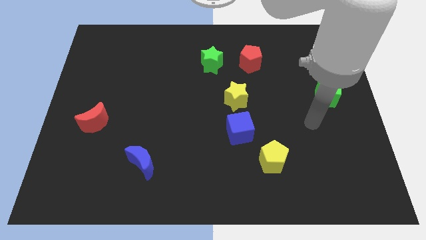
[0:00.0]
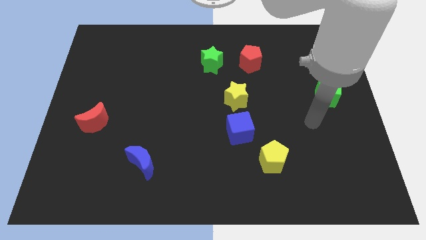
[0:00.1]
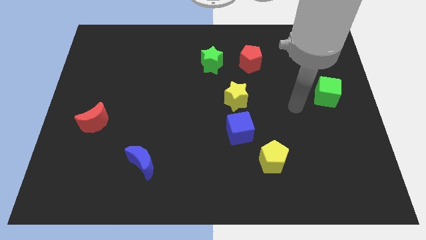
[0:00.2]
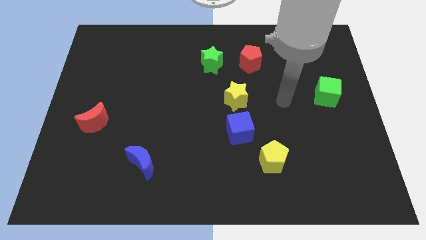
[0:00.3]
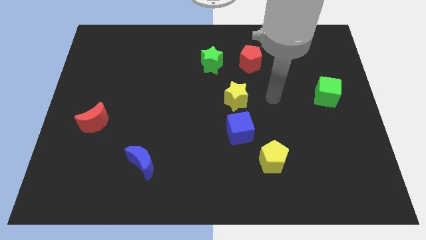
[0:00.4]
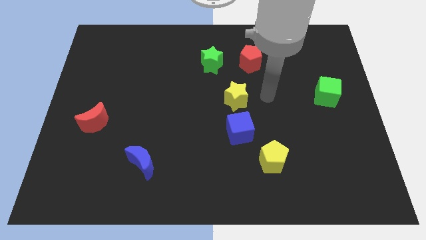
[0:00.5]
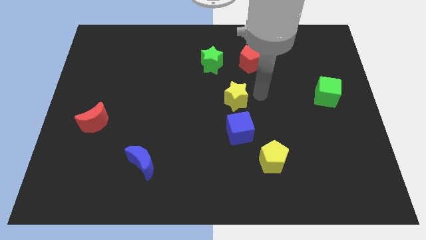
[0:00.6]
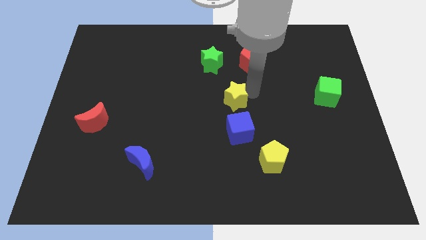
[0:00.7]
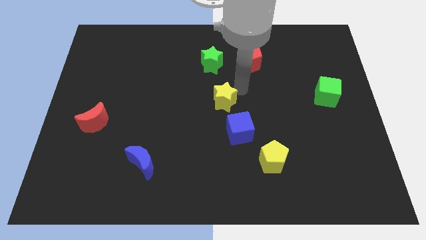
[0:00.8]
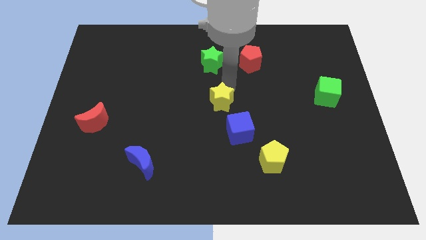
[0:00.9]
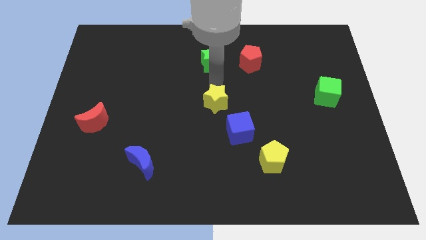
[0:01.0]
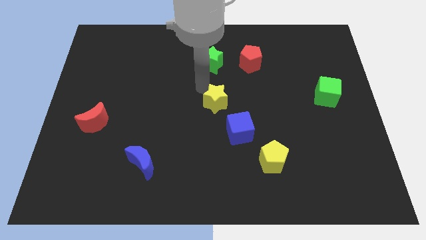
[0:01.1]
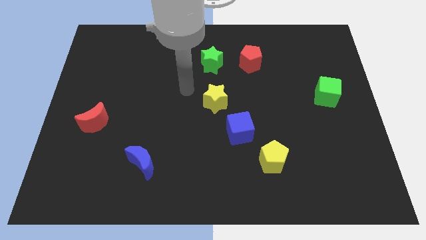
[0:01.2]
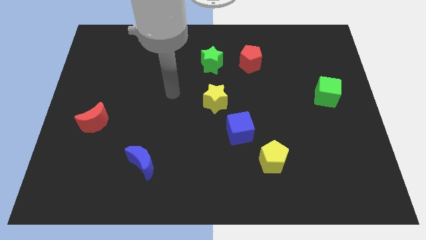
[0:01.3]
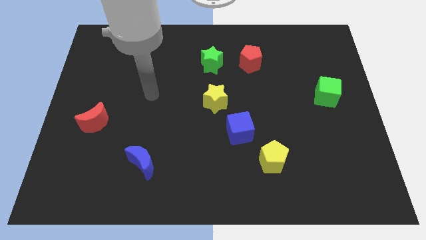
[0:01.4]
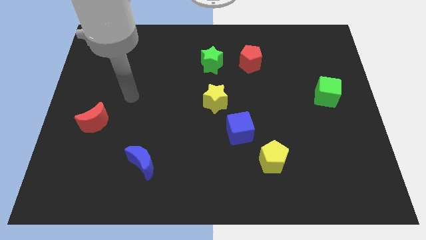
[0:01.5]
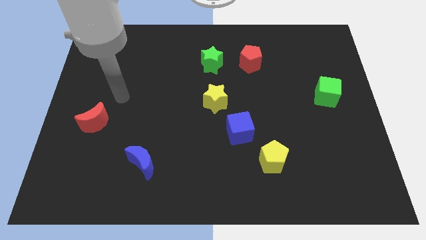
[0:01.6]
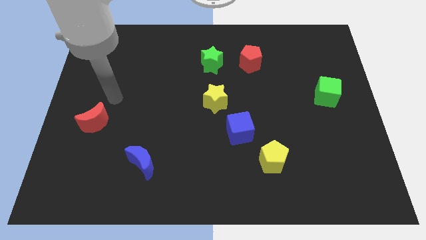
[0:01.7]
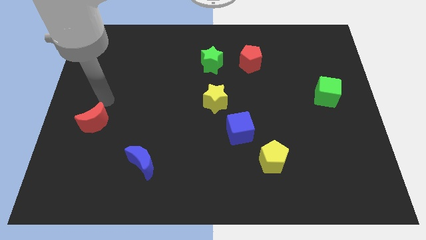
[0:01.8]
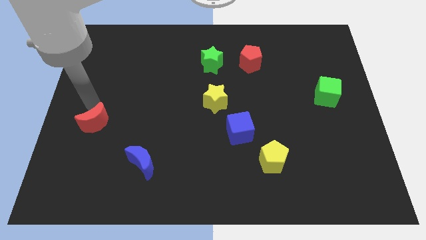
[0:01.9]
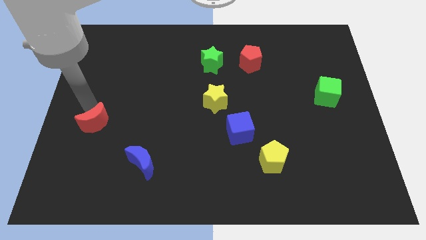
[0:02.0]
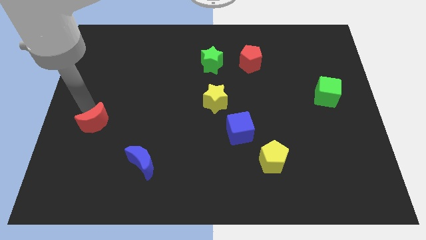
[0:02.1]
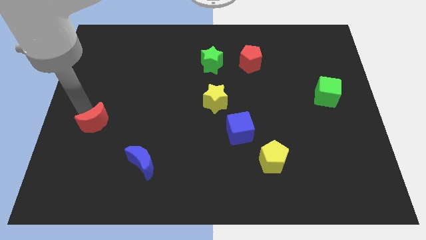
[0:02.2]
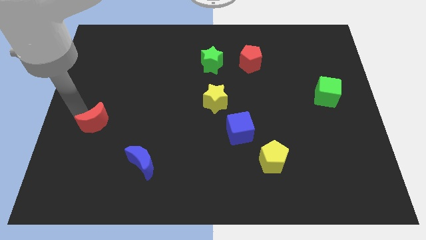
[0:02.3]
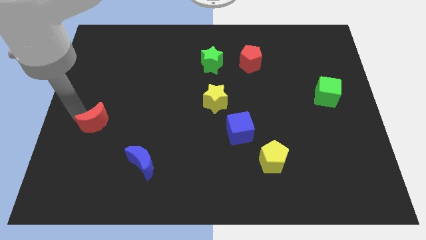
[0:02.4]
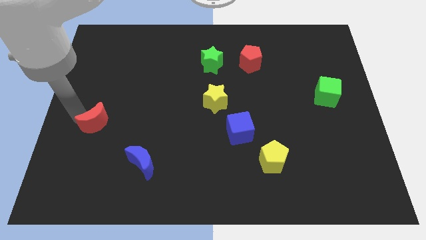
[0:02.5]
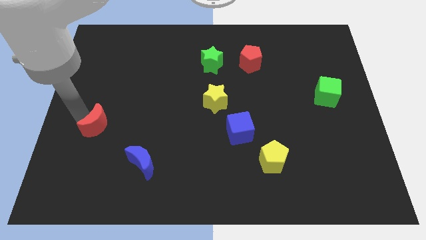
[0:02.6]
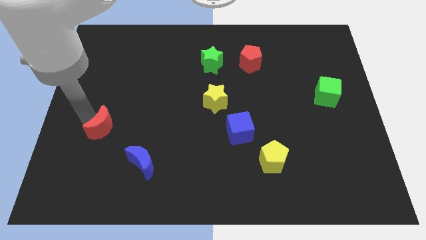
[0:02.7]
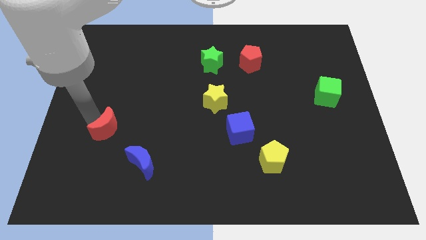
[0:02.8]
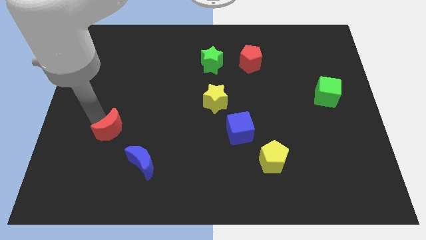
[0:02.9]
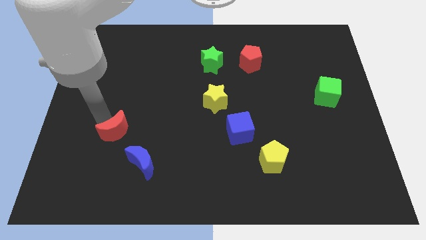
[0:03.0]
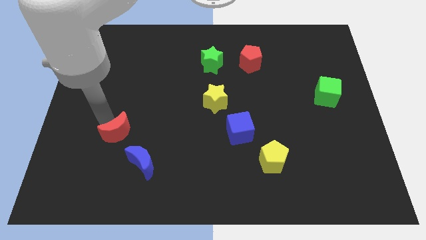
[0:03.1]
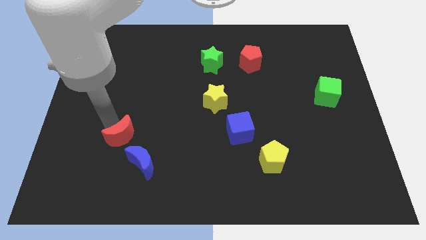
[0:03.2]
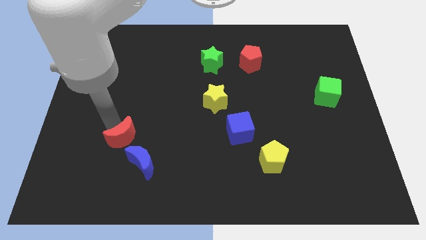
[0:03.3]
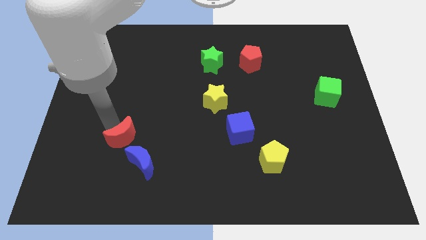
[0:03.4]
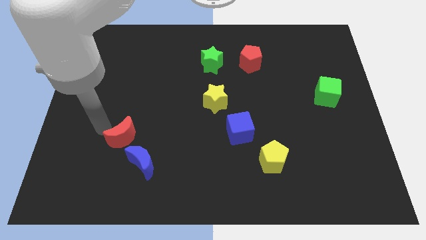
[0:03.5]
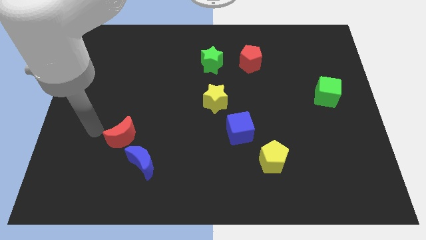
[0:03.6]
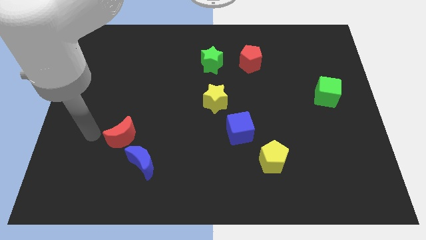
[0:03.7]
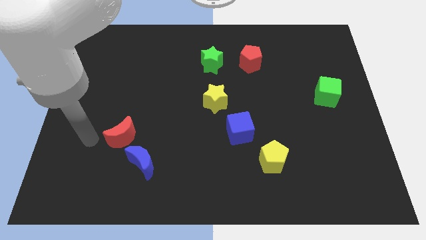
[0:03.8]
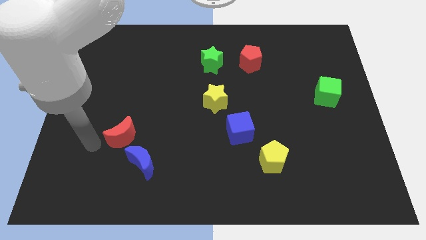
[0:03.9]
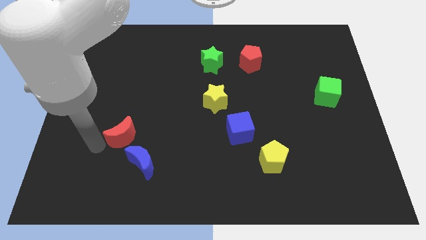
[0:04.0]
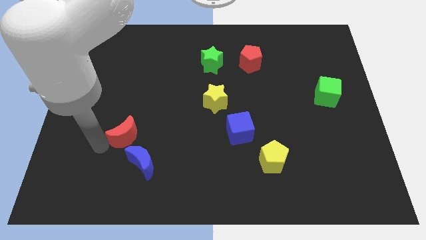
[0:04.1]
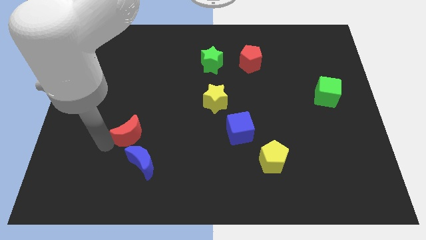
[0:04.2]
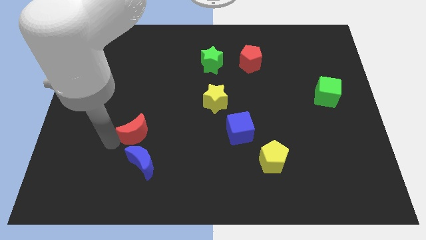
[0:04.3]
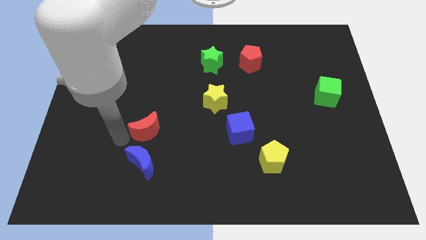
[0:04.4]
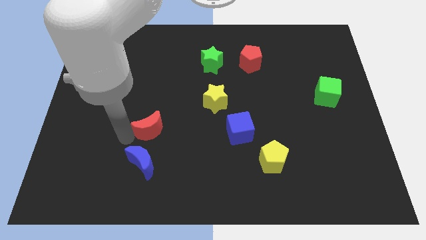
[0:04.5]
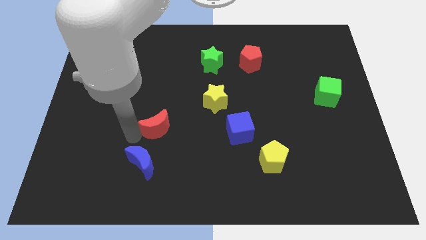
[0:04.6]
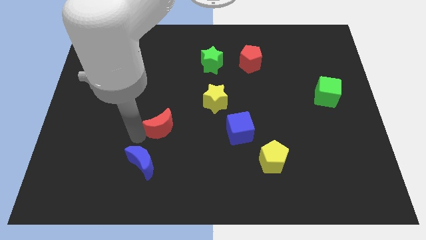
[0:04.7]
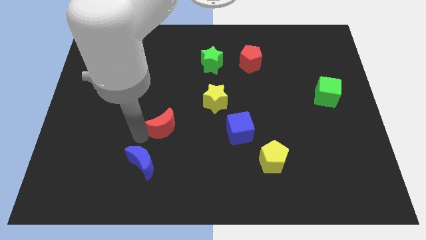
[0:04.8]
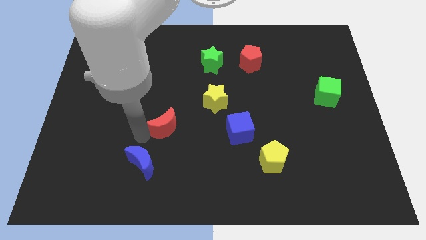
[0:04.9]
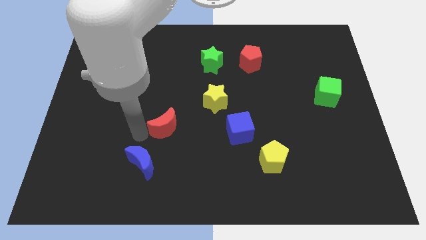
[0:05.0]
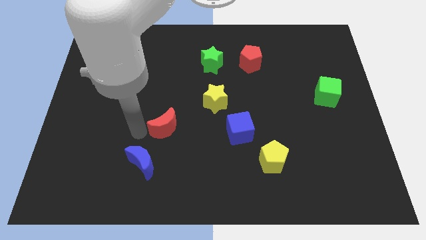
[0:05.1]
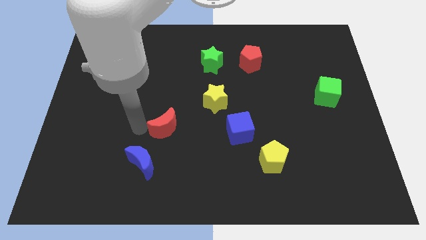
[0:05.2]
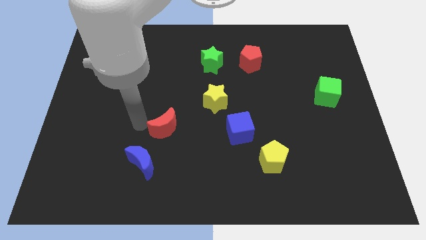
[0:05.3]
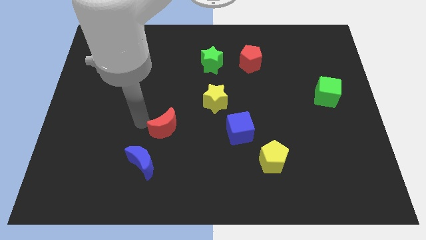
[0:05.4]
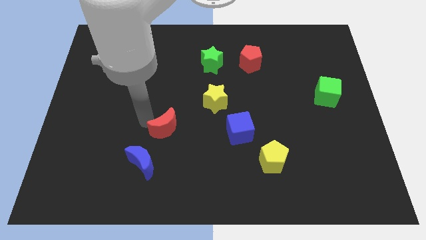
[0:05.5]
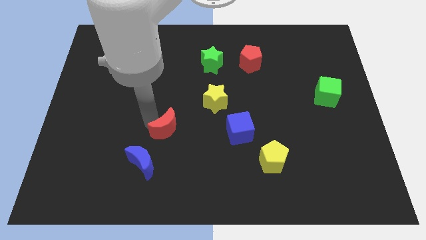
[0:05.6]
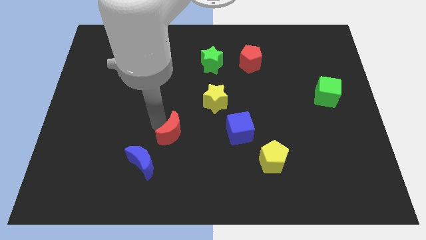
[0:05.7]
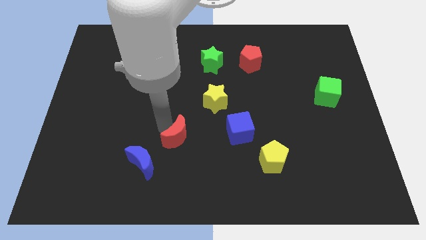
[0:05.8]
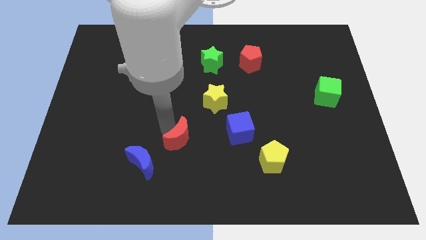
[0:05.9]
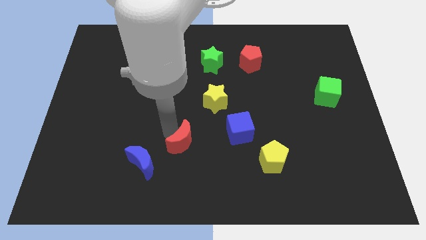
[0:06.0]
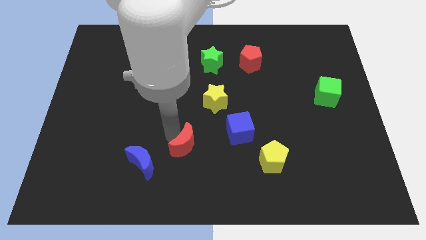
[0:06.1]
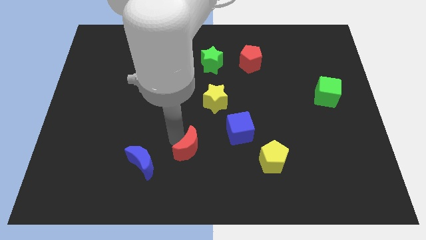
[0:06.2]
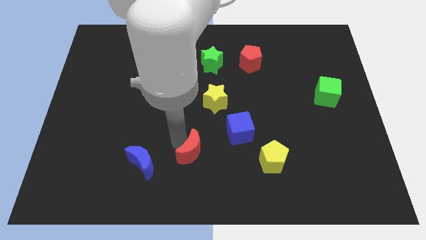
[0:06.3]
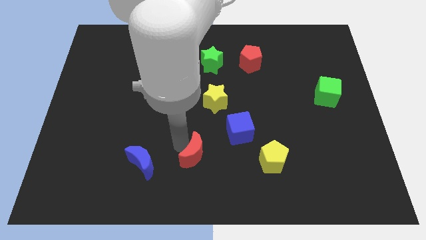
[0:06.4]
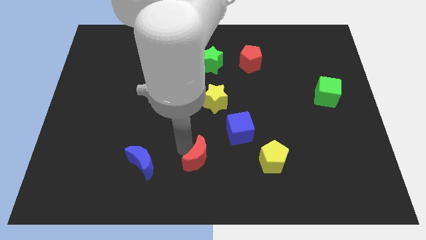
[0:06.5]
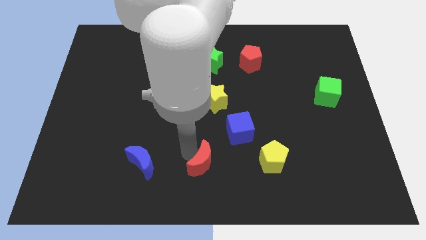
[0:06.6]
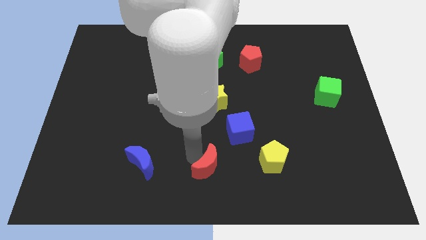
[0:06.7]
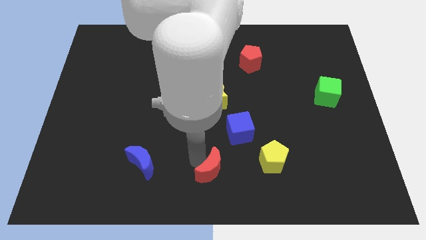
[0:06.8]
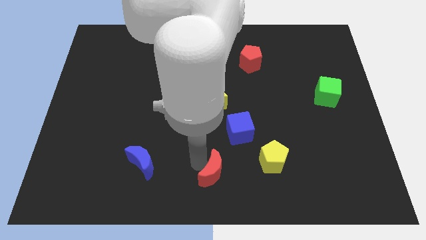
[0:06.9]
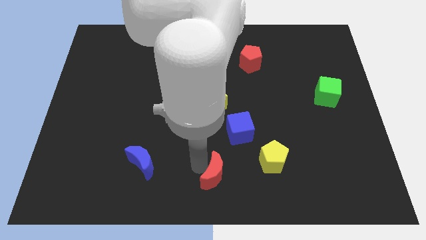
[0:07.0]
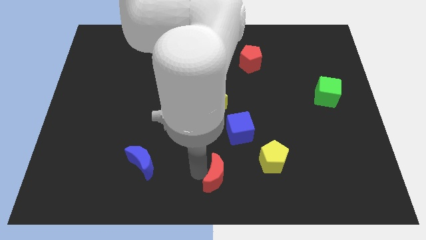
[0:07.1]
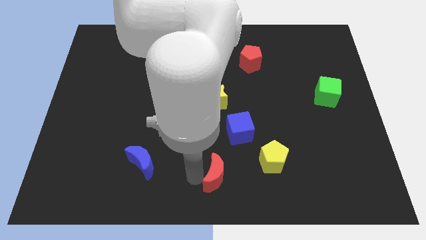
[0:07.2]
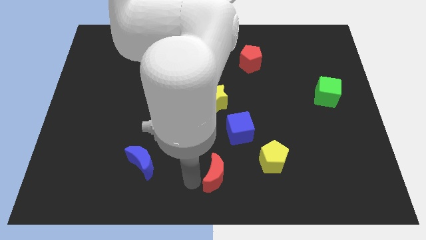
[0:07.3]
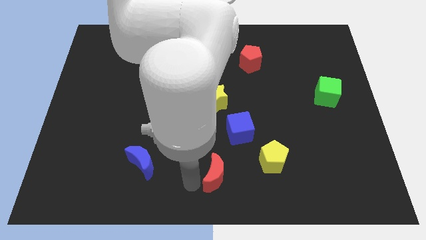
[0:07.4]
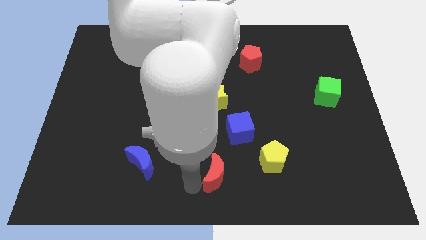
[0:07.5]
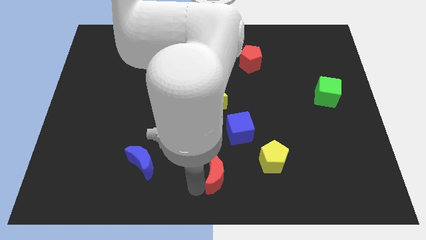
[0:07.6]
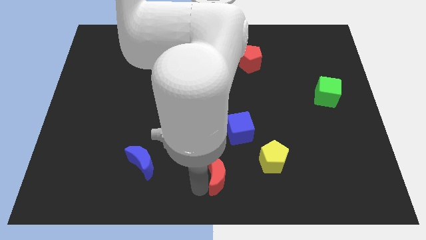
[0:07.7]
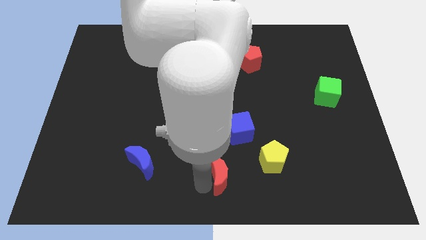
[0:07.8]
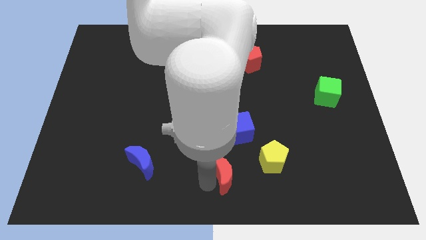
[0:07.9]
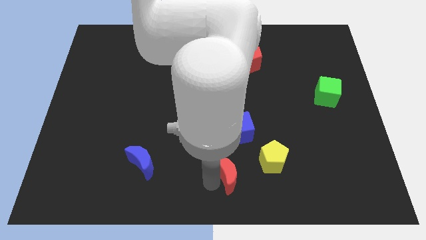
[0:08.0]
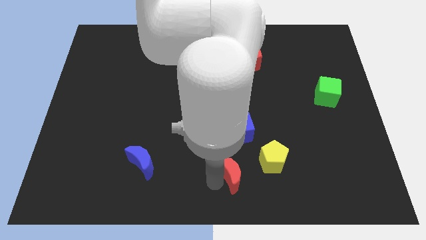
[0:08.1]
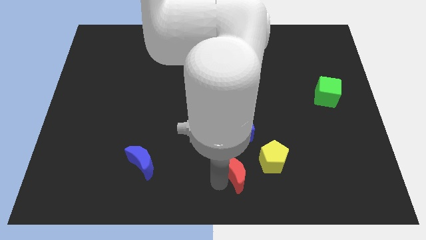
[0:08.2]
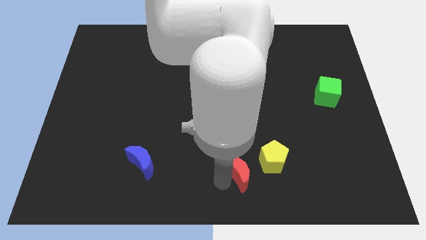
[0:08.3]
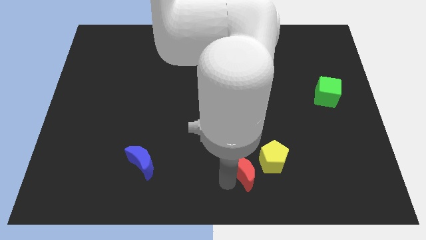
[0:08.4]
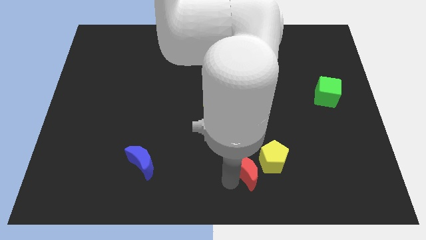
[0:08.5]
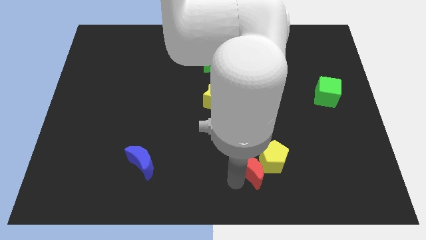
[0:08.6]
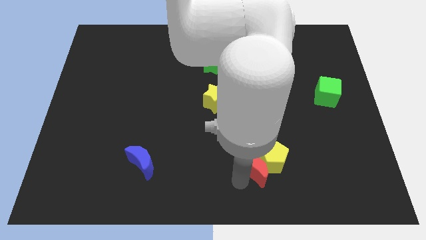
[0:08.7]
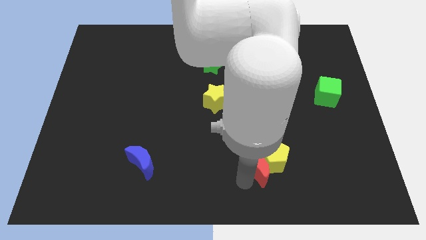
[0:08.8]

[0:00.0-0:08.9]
slide the red moon next to the yellow pentagon
